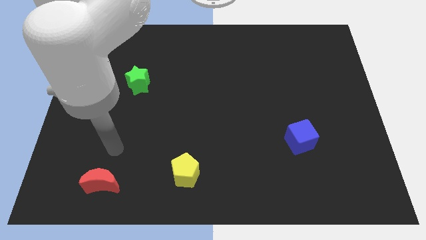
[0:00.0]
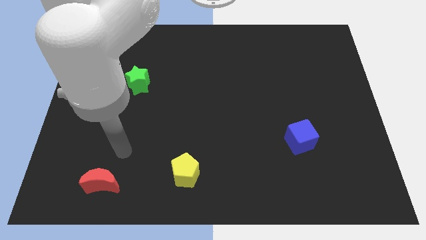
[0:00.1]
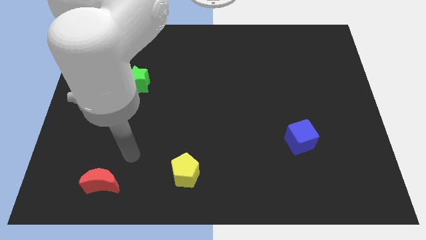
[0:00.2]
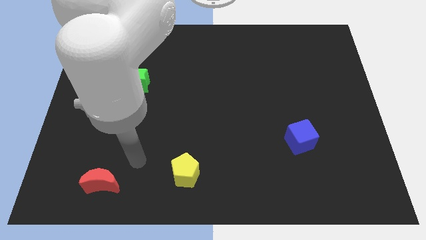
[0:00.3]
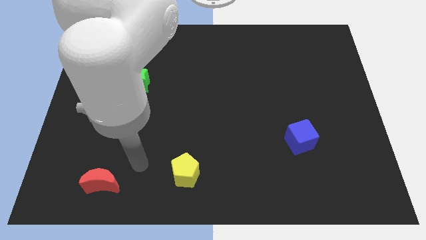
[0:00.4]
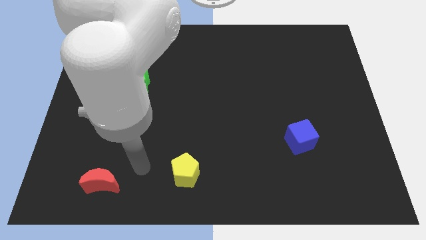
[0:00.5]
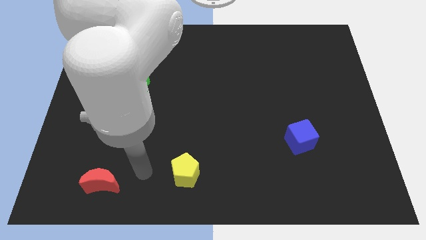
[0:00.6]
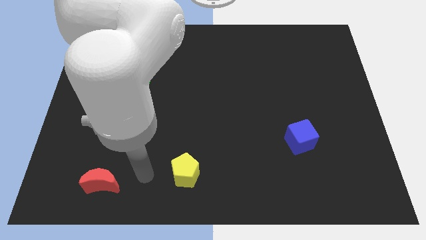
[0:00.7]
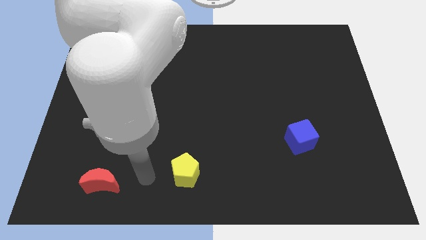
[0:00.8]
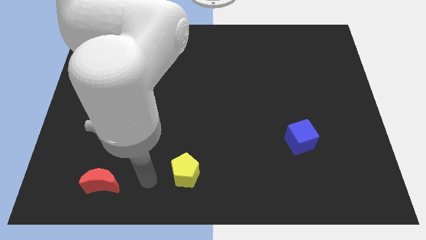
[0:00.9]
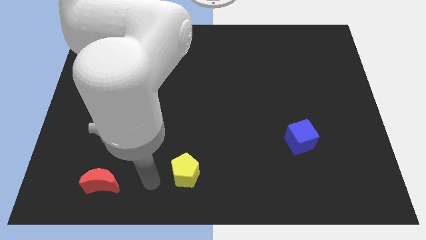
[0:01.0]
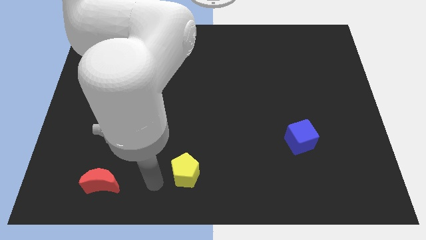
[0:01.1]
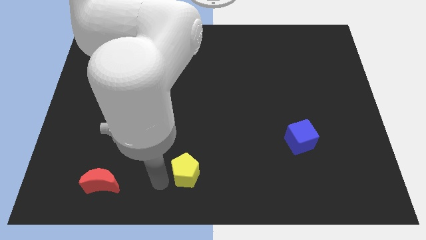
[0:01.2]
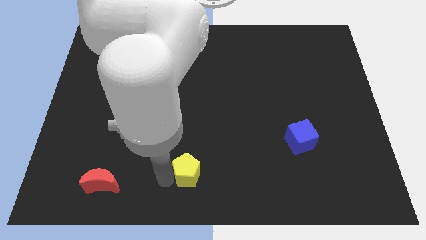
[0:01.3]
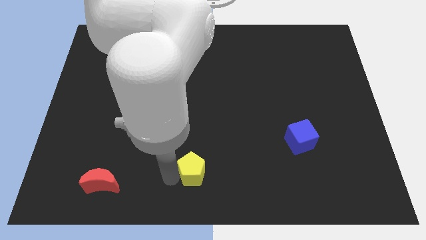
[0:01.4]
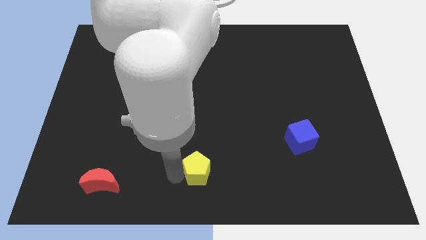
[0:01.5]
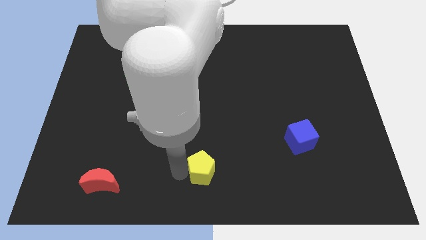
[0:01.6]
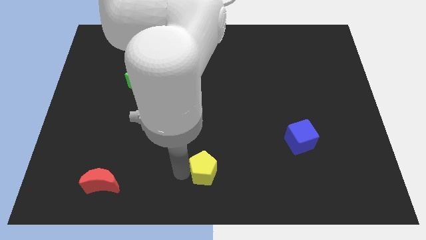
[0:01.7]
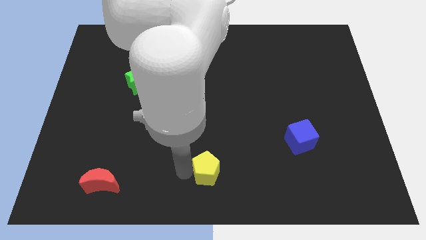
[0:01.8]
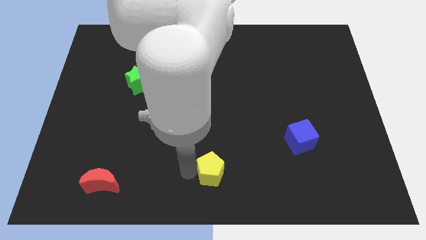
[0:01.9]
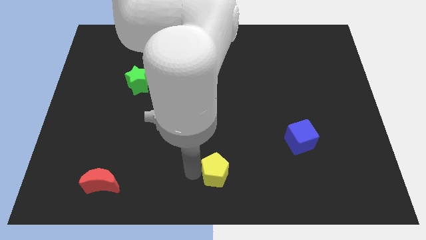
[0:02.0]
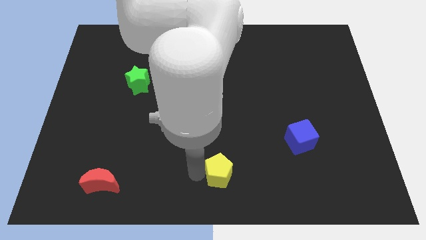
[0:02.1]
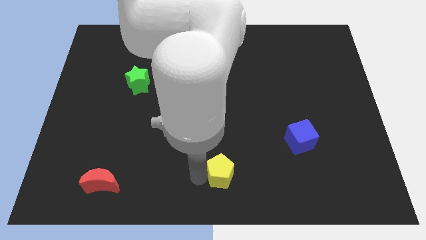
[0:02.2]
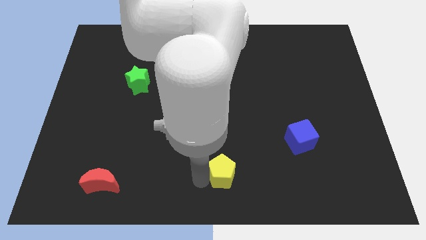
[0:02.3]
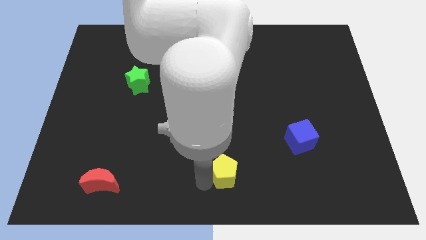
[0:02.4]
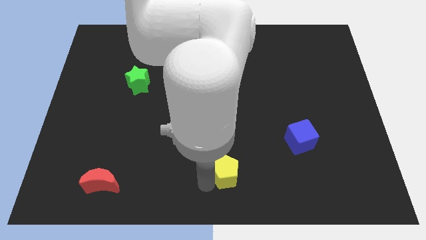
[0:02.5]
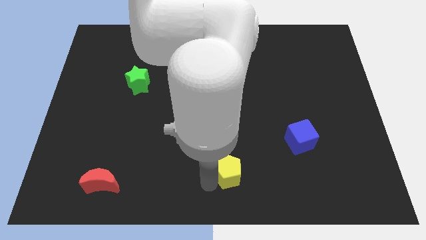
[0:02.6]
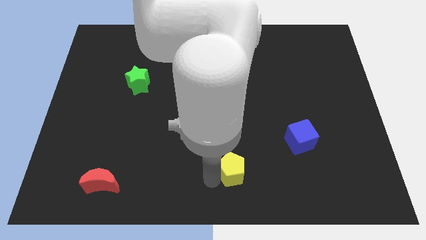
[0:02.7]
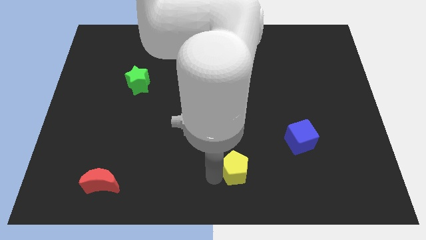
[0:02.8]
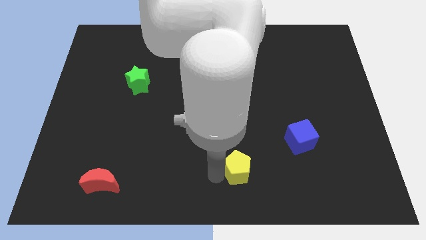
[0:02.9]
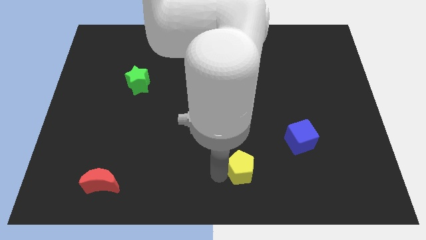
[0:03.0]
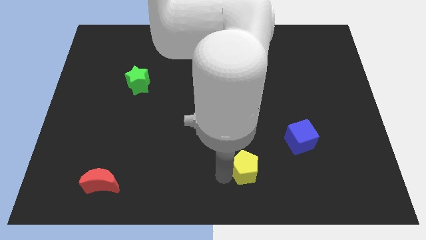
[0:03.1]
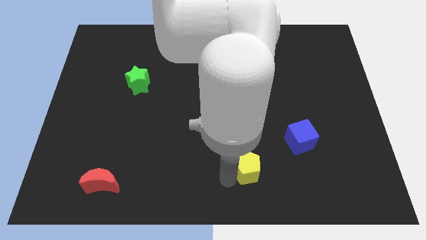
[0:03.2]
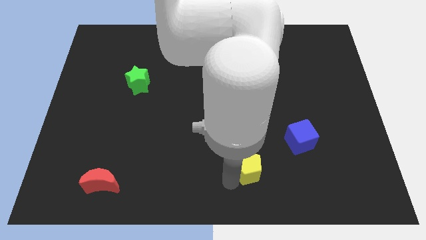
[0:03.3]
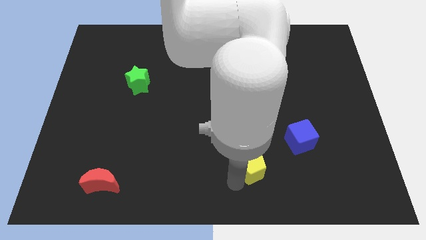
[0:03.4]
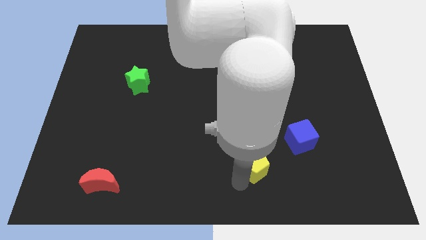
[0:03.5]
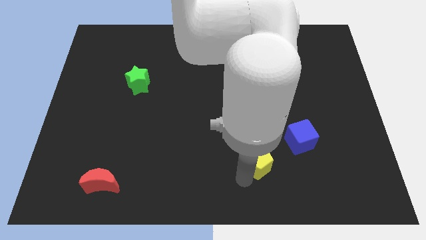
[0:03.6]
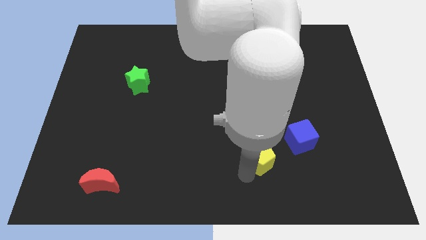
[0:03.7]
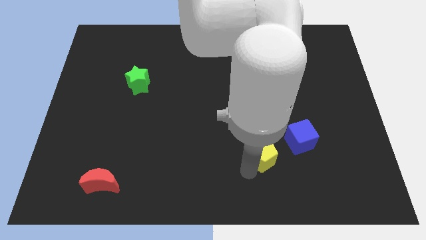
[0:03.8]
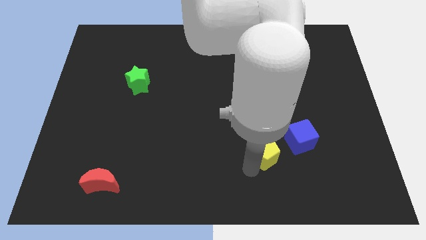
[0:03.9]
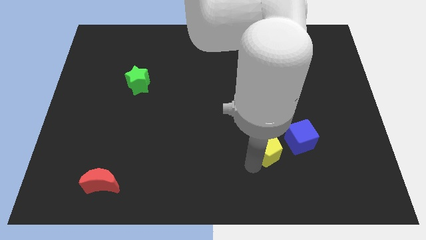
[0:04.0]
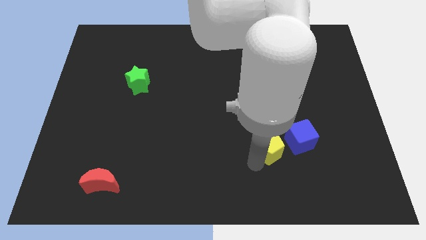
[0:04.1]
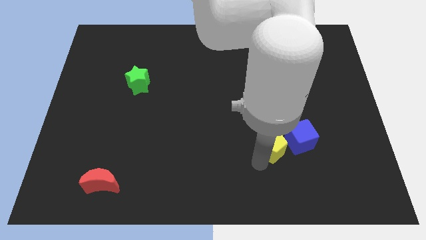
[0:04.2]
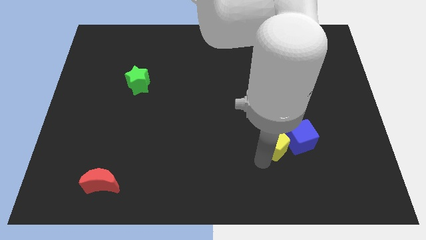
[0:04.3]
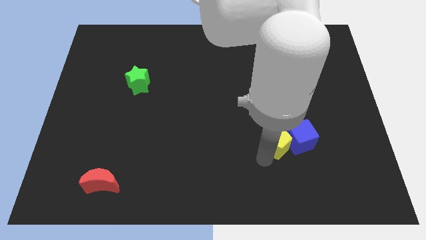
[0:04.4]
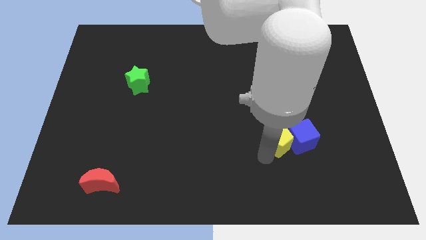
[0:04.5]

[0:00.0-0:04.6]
move the yellow block towards the cube

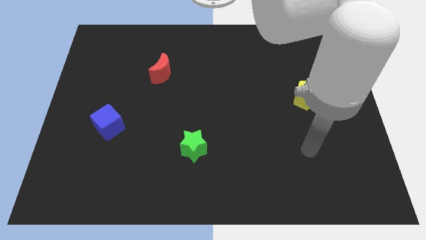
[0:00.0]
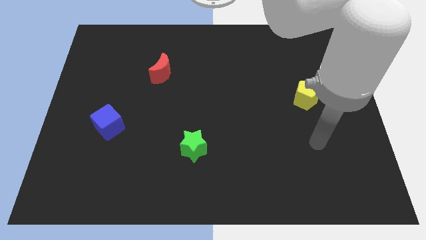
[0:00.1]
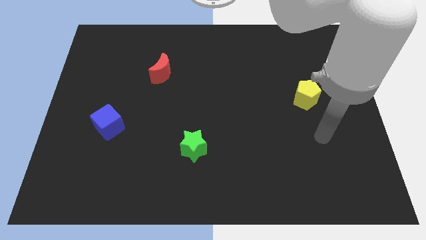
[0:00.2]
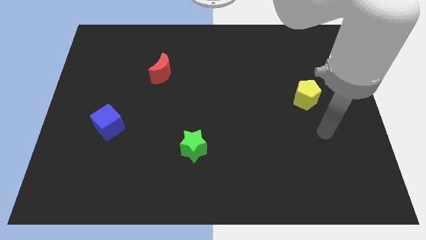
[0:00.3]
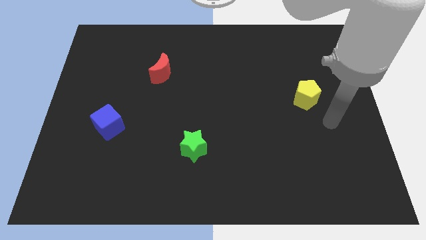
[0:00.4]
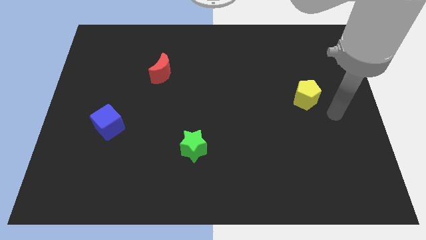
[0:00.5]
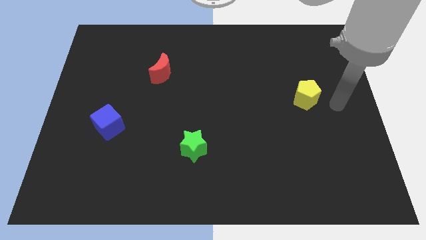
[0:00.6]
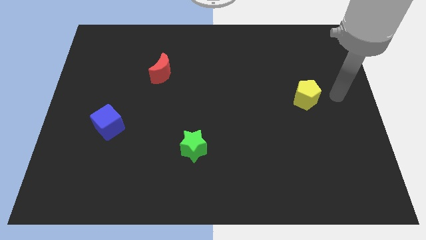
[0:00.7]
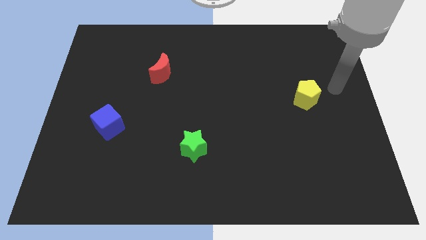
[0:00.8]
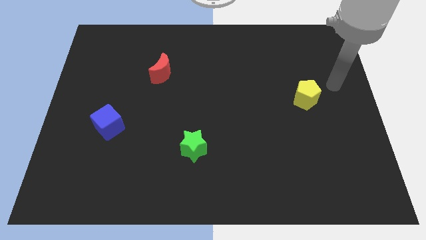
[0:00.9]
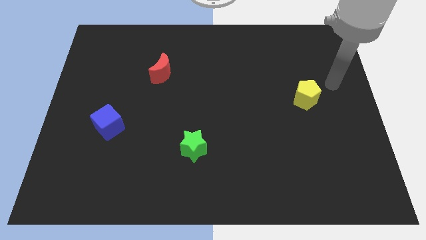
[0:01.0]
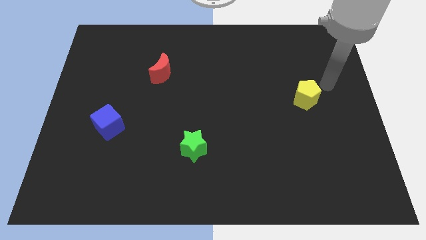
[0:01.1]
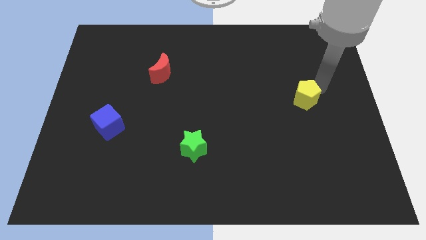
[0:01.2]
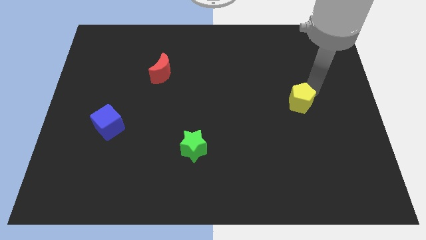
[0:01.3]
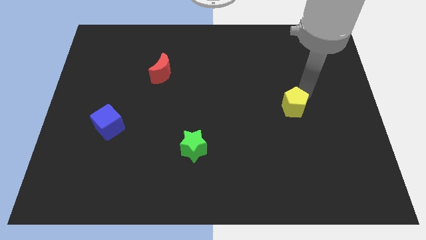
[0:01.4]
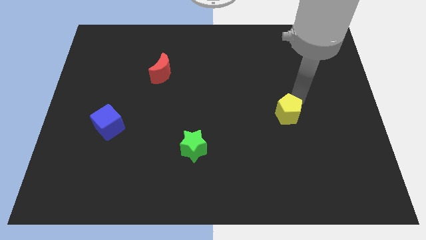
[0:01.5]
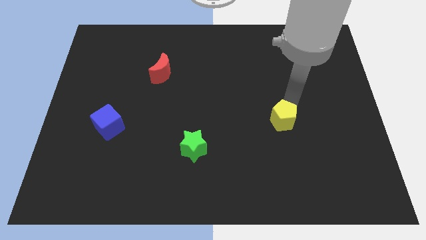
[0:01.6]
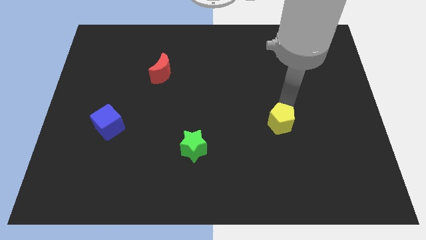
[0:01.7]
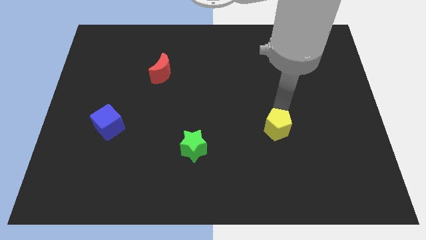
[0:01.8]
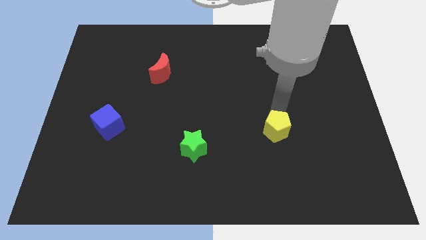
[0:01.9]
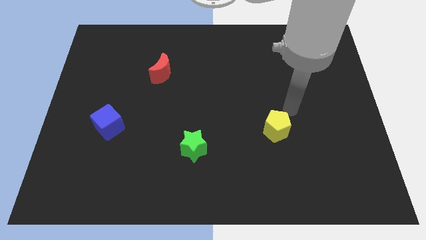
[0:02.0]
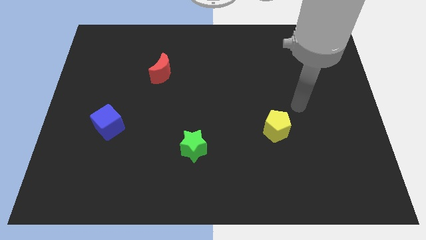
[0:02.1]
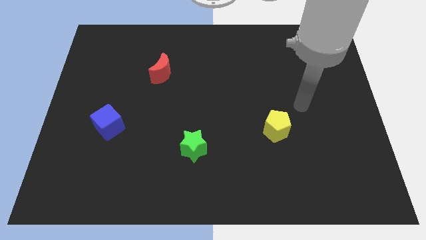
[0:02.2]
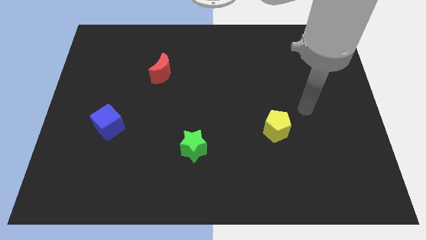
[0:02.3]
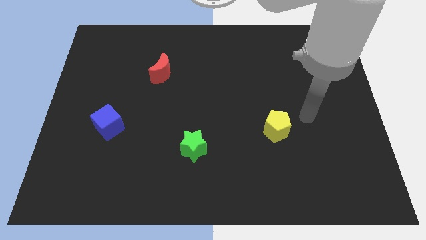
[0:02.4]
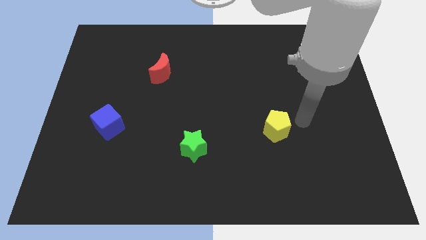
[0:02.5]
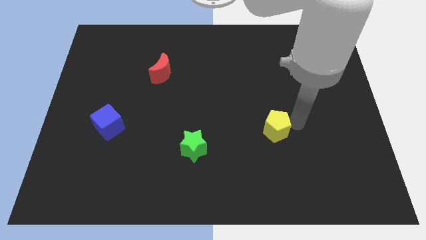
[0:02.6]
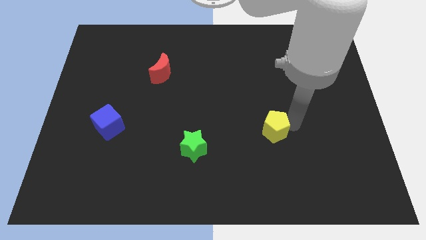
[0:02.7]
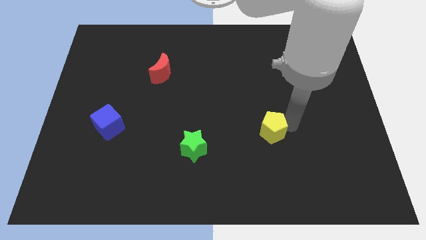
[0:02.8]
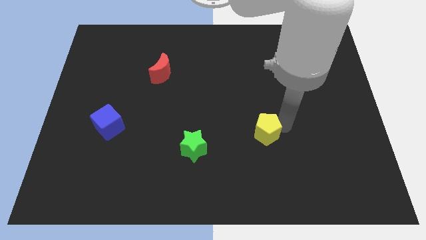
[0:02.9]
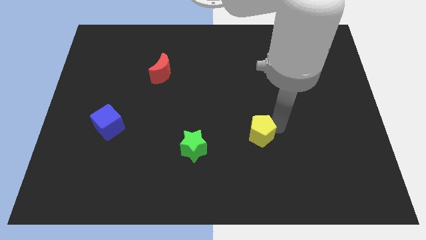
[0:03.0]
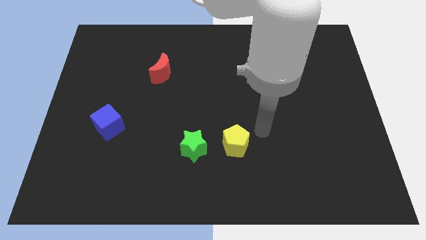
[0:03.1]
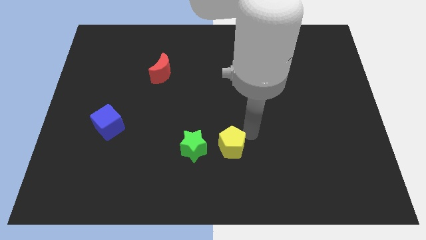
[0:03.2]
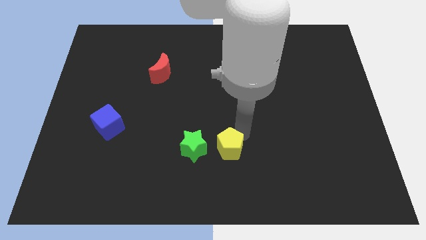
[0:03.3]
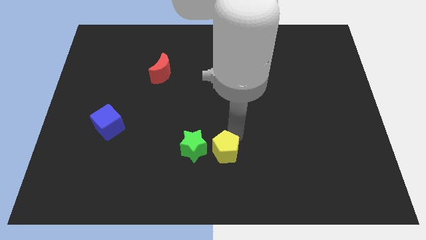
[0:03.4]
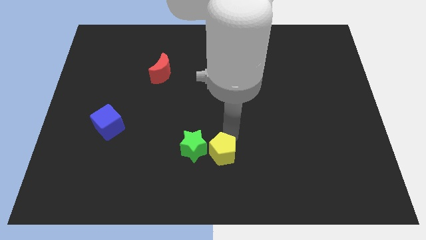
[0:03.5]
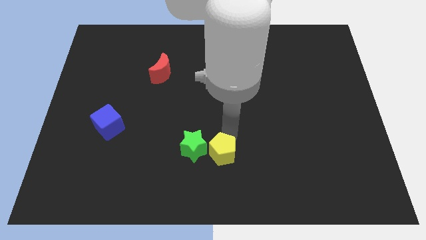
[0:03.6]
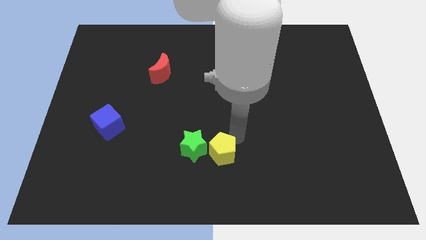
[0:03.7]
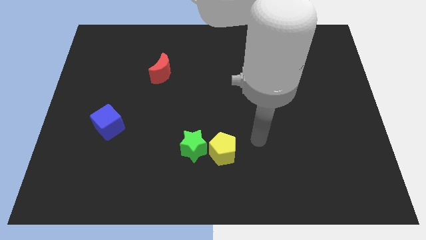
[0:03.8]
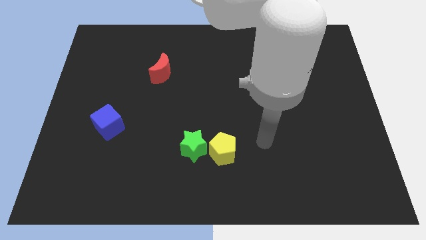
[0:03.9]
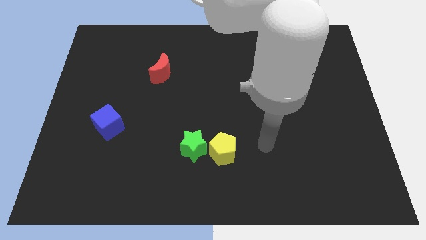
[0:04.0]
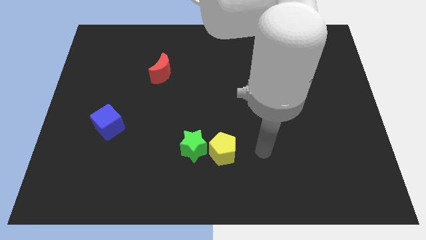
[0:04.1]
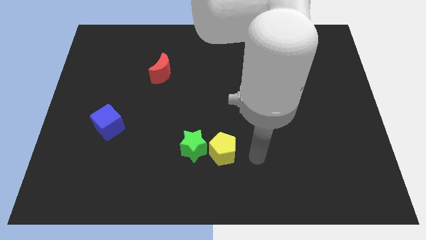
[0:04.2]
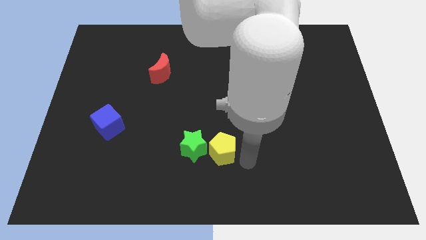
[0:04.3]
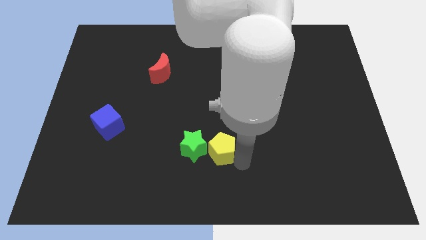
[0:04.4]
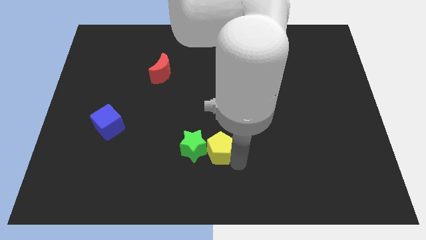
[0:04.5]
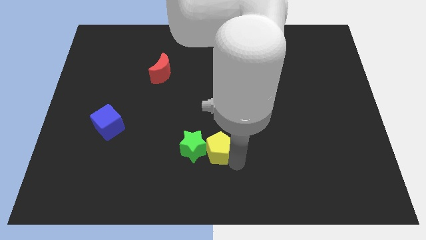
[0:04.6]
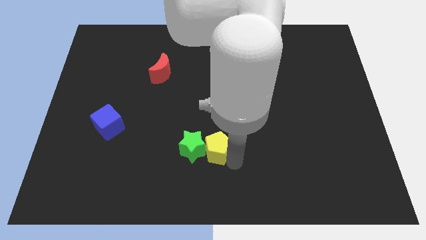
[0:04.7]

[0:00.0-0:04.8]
push the pentagon to the star
